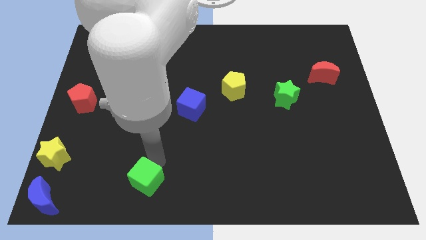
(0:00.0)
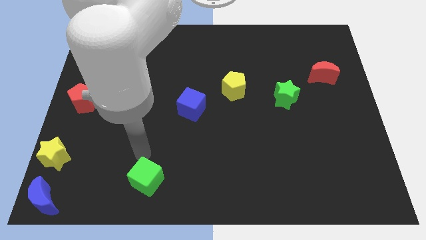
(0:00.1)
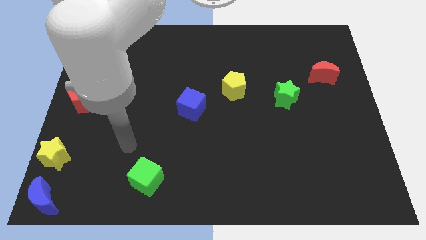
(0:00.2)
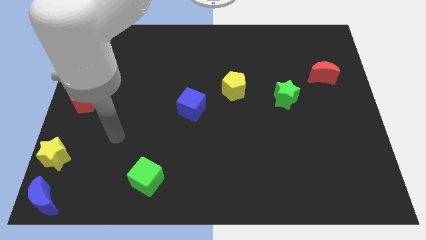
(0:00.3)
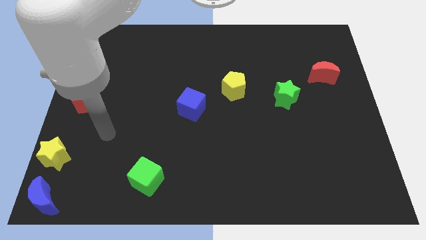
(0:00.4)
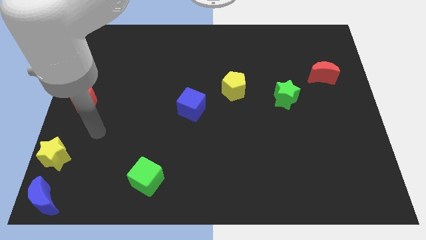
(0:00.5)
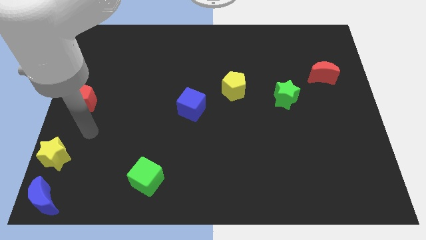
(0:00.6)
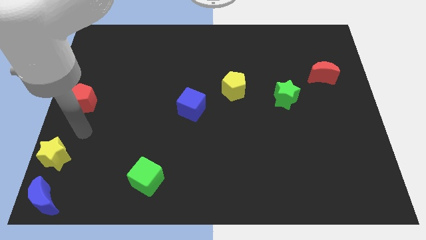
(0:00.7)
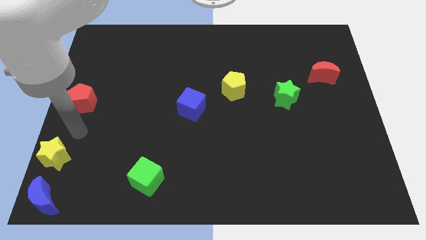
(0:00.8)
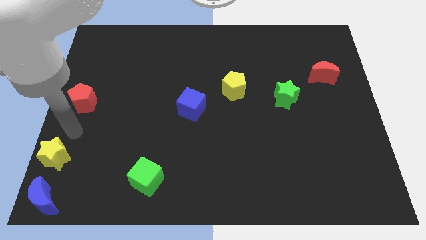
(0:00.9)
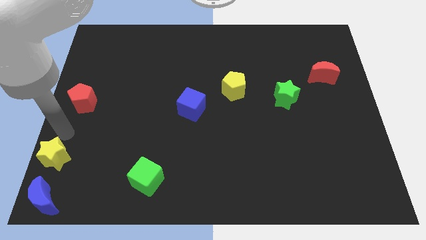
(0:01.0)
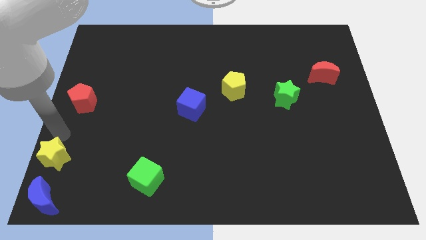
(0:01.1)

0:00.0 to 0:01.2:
place your arm in between the yellow star and red pentagon

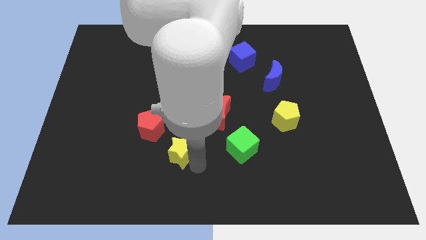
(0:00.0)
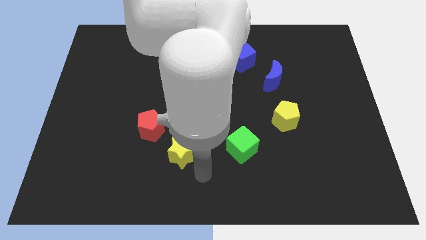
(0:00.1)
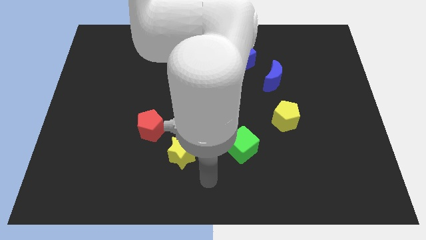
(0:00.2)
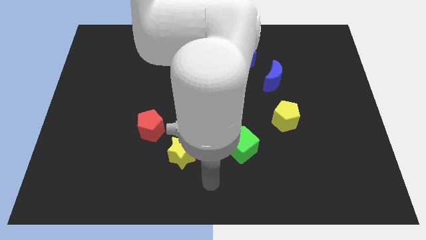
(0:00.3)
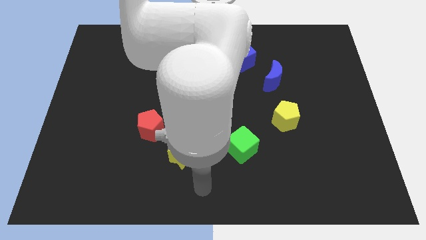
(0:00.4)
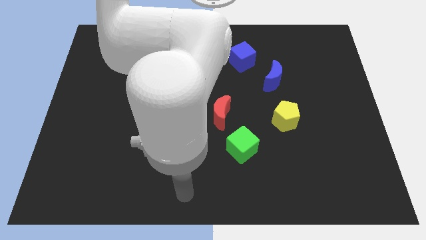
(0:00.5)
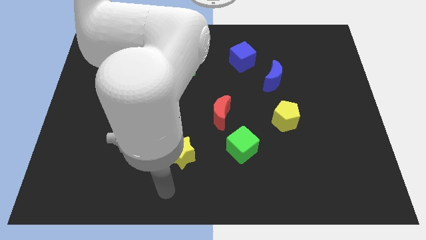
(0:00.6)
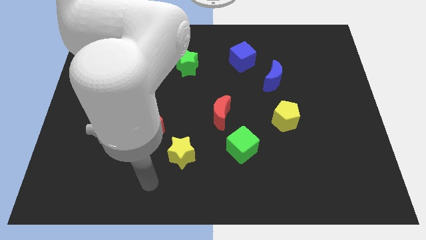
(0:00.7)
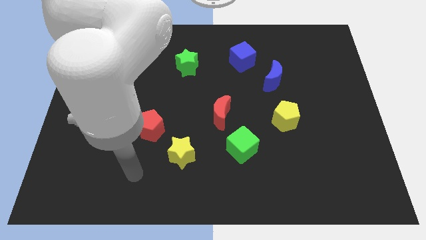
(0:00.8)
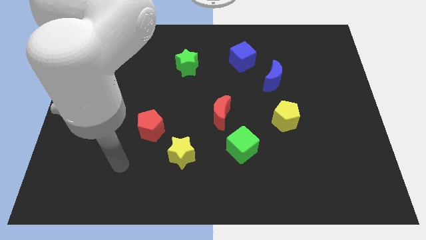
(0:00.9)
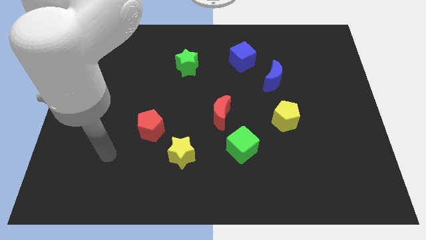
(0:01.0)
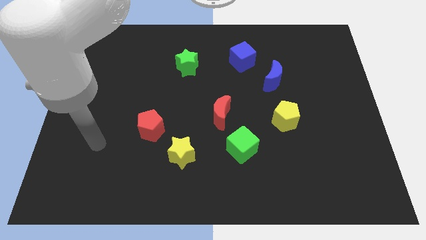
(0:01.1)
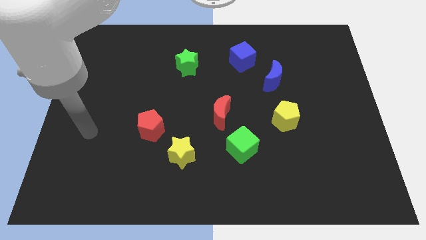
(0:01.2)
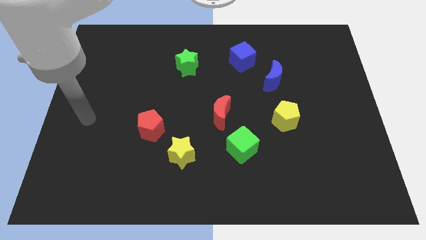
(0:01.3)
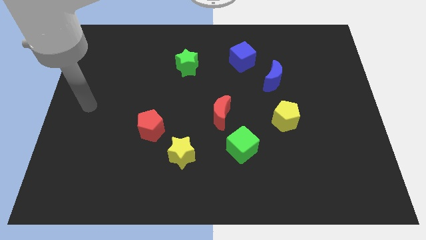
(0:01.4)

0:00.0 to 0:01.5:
move your hand away from the yellow star

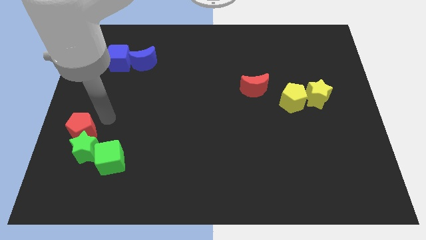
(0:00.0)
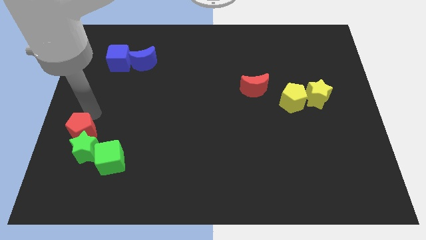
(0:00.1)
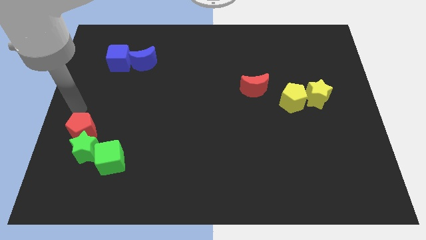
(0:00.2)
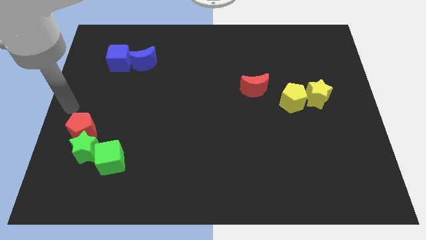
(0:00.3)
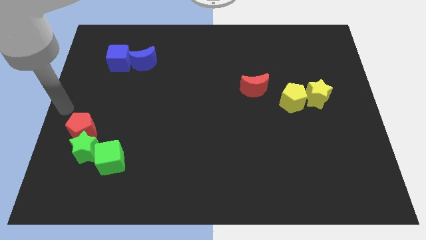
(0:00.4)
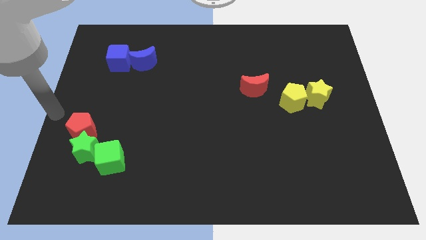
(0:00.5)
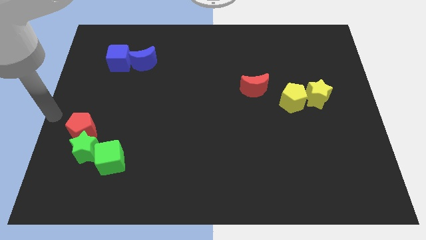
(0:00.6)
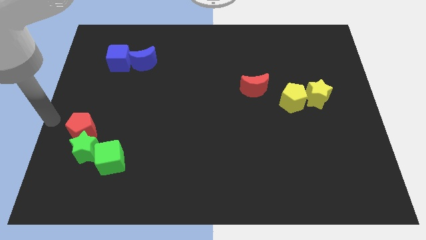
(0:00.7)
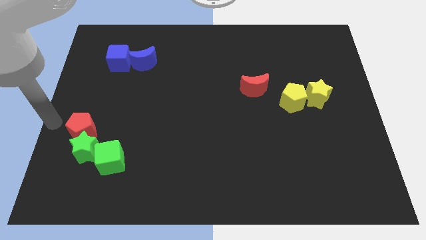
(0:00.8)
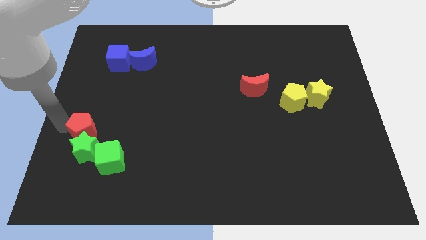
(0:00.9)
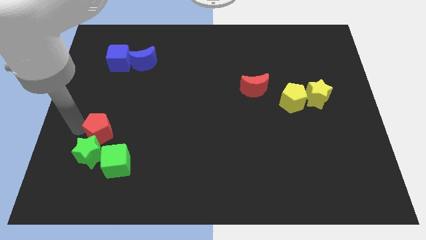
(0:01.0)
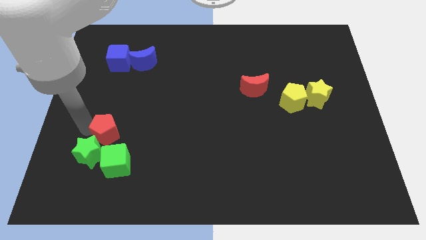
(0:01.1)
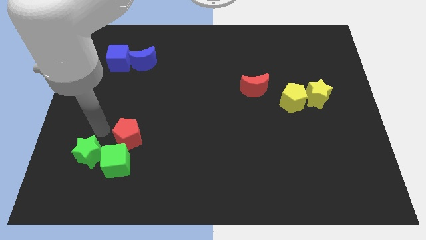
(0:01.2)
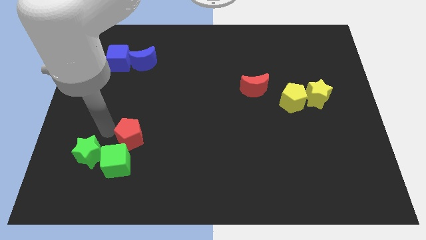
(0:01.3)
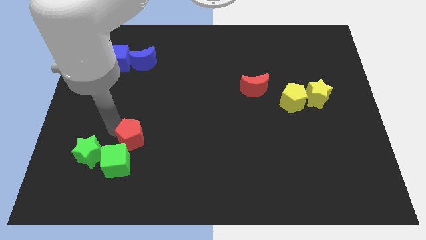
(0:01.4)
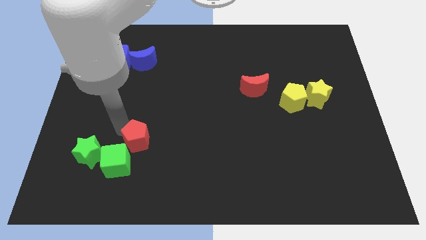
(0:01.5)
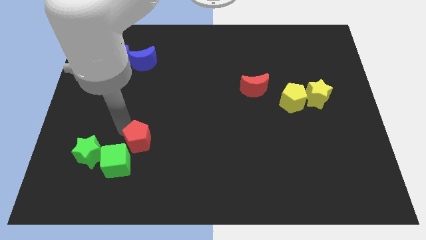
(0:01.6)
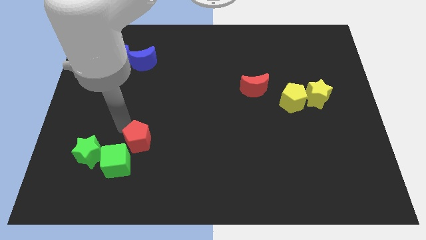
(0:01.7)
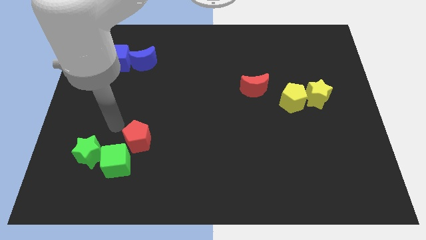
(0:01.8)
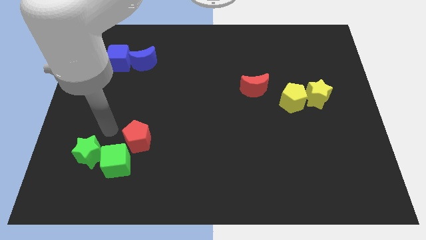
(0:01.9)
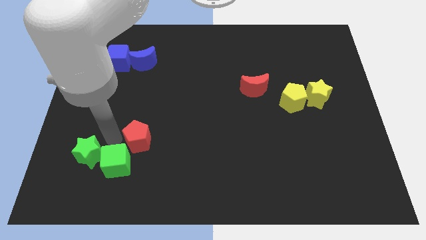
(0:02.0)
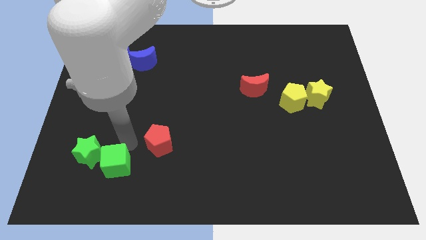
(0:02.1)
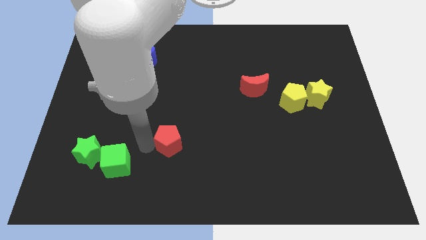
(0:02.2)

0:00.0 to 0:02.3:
push red pentagon towards right side of the board

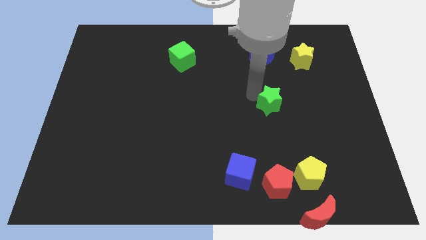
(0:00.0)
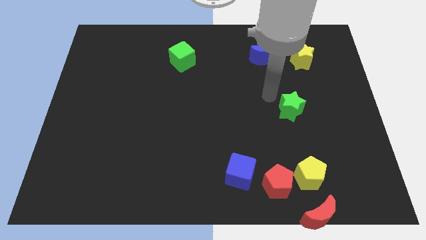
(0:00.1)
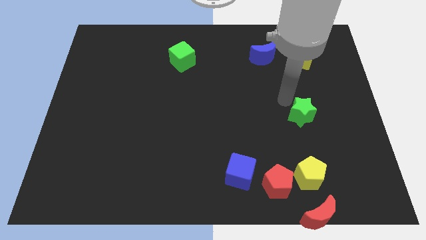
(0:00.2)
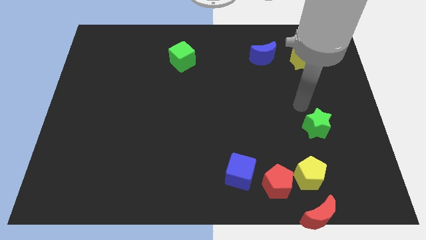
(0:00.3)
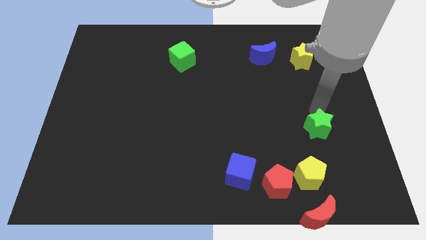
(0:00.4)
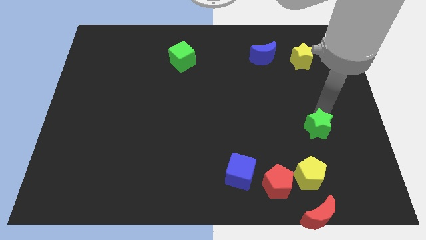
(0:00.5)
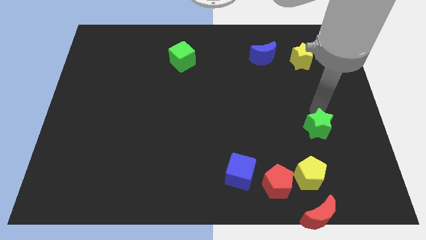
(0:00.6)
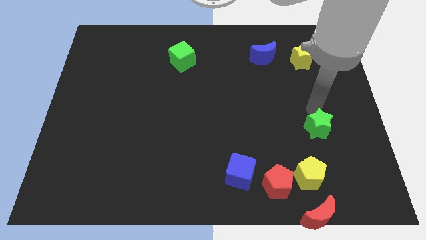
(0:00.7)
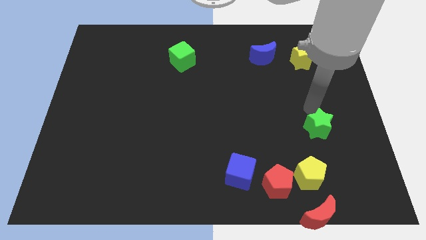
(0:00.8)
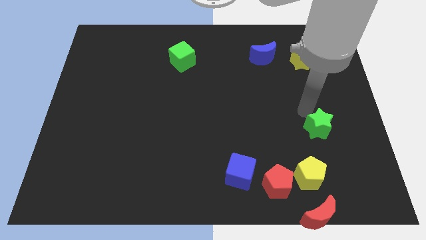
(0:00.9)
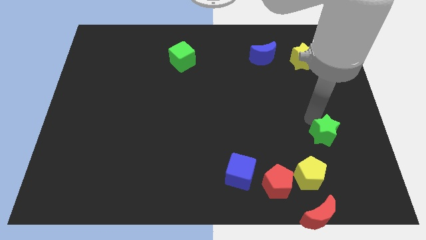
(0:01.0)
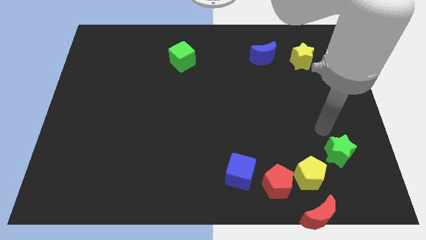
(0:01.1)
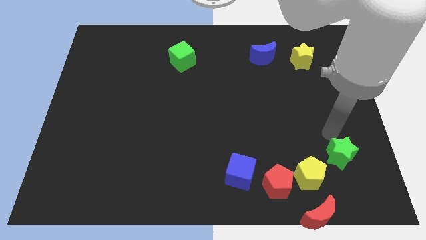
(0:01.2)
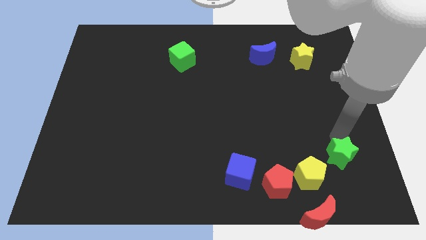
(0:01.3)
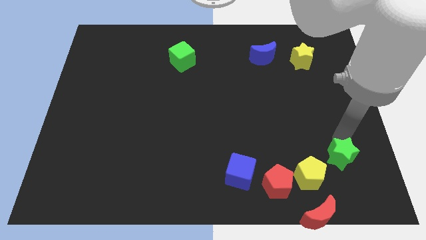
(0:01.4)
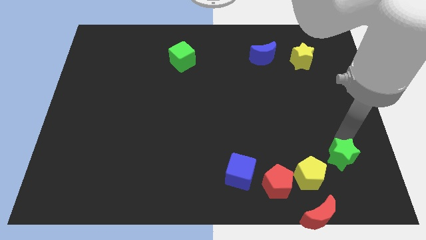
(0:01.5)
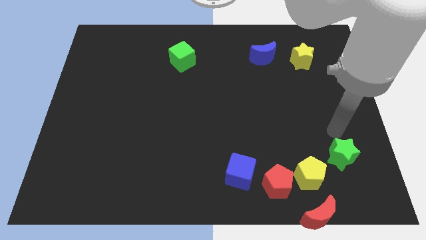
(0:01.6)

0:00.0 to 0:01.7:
push the green star diagonally to the top right of the yellow pentagon

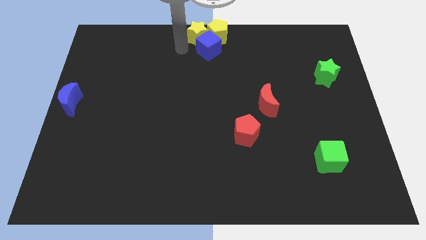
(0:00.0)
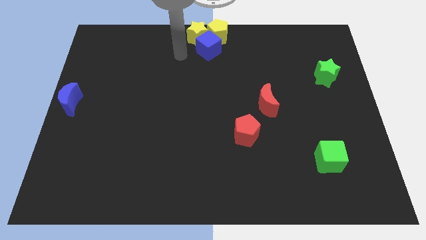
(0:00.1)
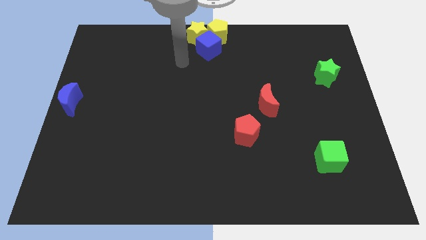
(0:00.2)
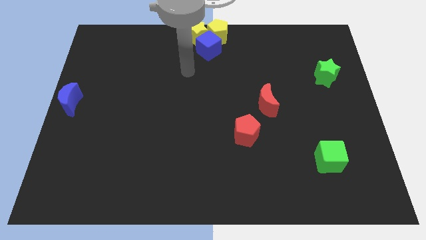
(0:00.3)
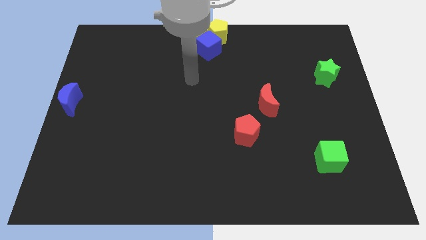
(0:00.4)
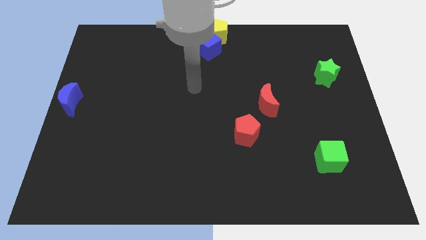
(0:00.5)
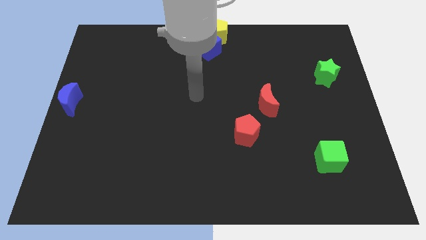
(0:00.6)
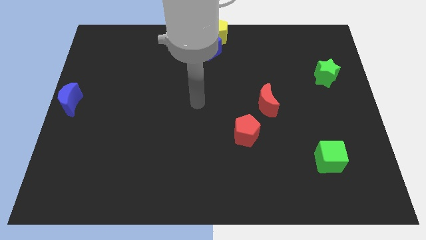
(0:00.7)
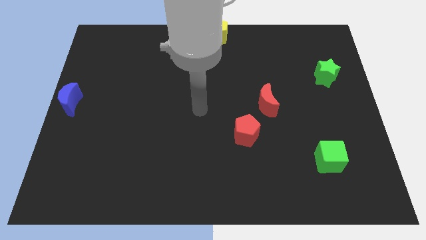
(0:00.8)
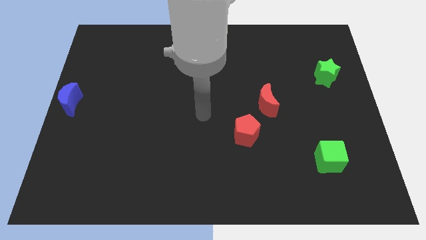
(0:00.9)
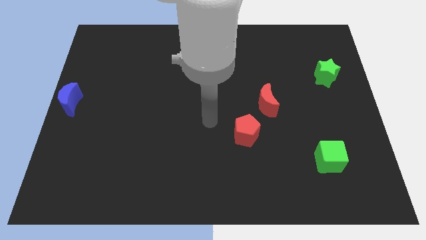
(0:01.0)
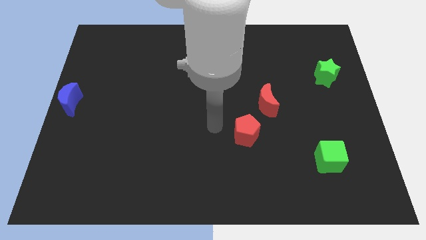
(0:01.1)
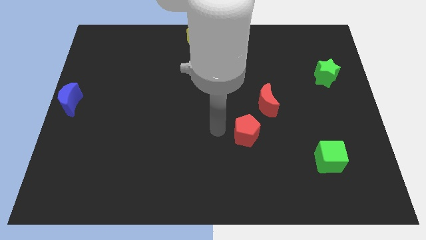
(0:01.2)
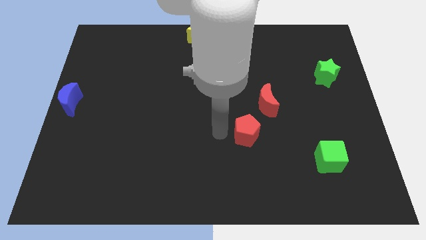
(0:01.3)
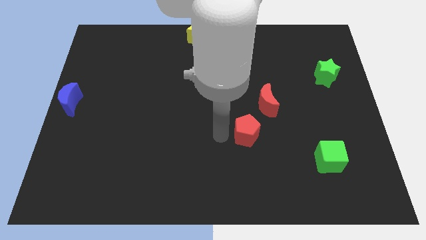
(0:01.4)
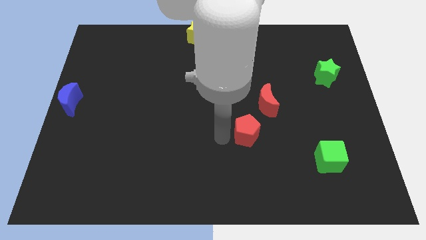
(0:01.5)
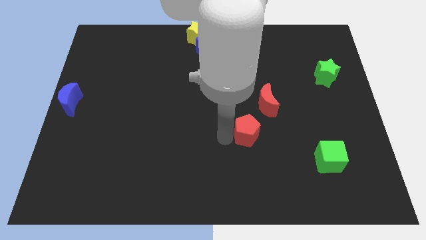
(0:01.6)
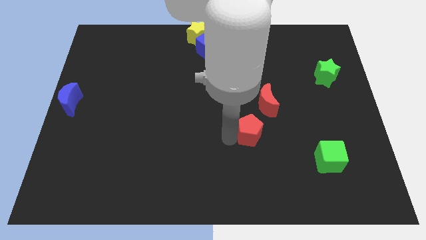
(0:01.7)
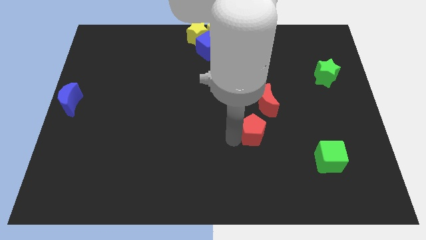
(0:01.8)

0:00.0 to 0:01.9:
place the arm to the left of the red pentagon

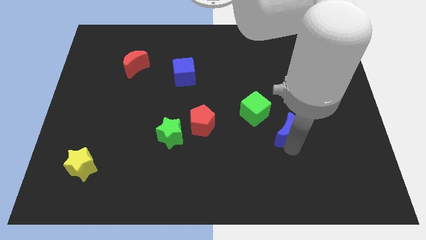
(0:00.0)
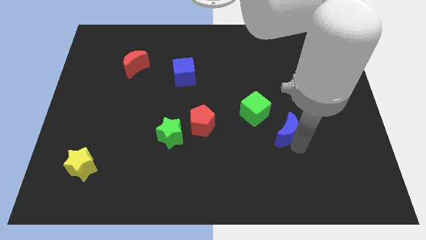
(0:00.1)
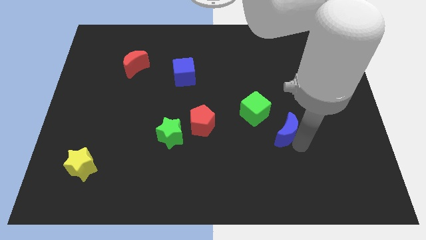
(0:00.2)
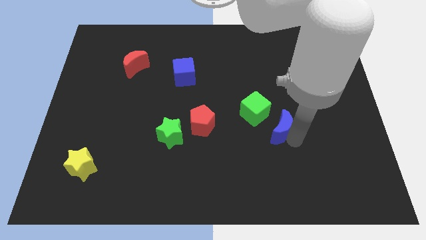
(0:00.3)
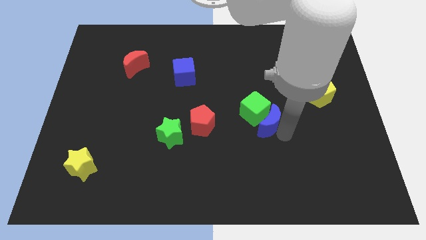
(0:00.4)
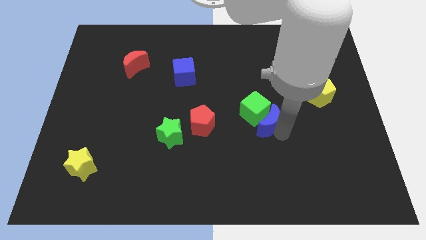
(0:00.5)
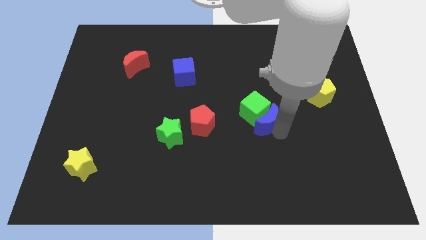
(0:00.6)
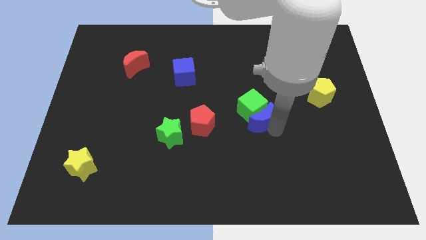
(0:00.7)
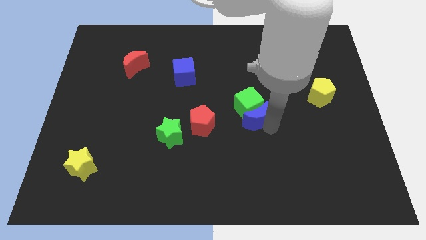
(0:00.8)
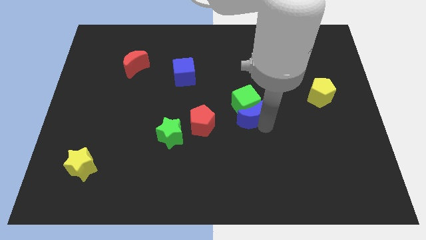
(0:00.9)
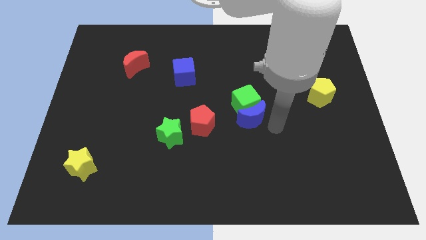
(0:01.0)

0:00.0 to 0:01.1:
push the blue moon into the green cube
